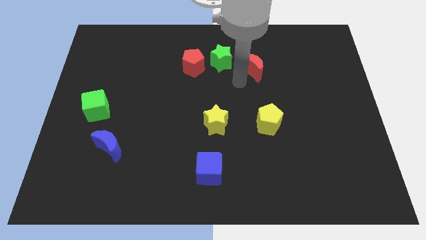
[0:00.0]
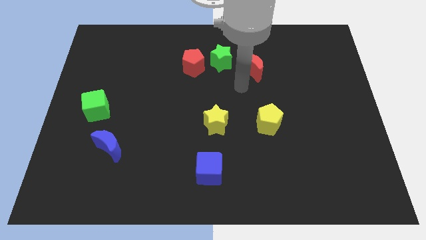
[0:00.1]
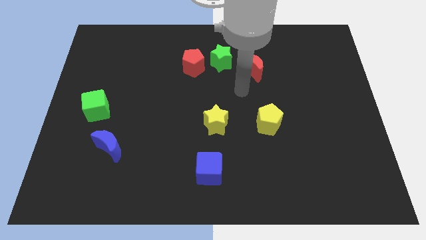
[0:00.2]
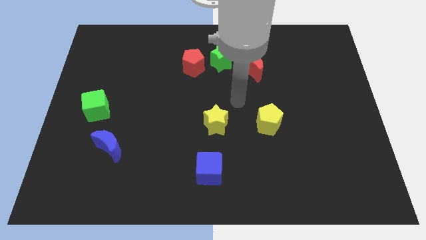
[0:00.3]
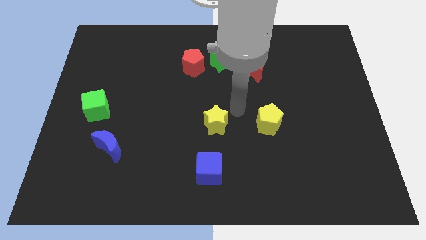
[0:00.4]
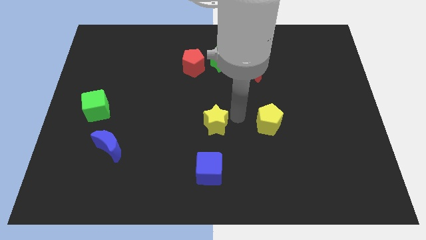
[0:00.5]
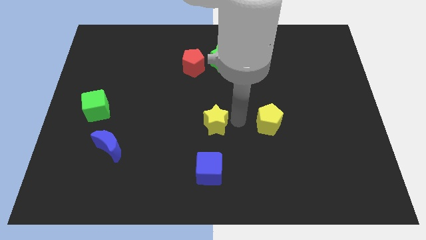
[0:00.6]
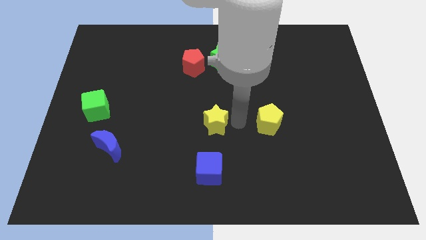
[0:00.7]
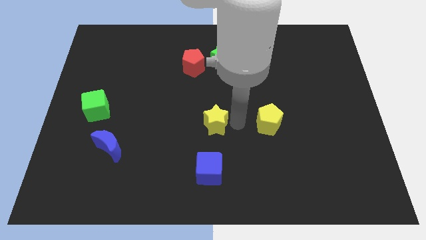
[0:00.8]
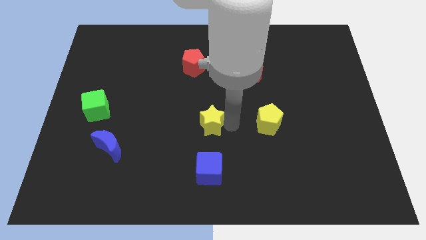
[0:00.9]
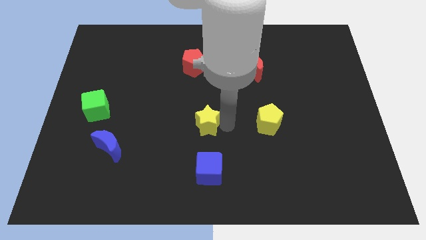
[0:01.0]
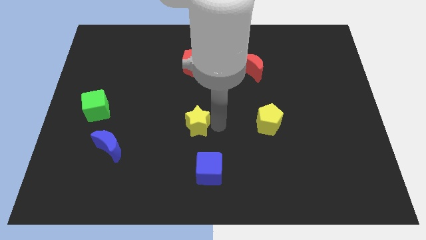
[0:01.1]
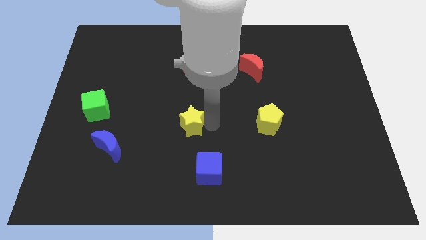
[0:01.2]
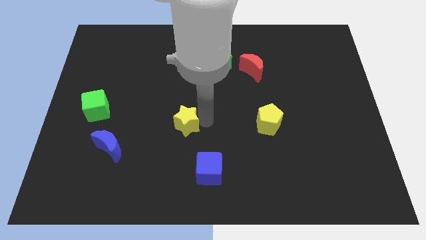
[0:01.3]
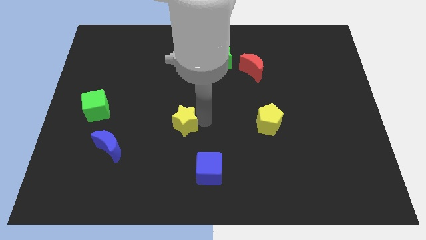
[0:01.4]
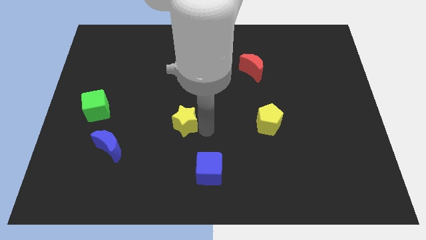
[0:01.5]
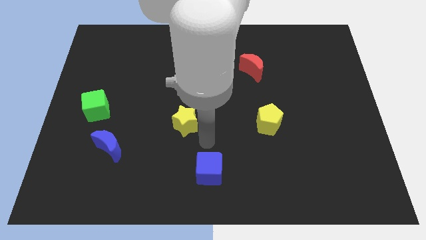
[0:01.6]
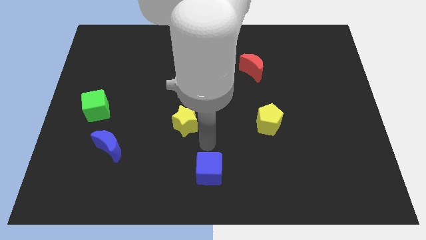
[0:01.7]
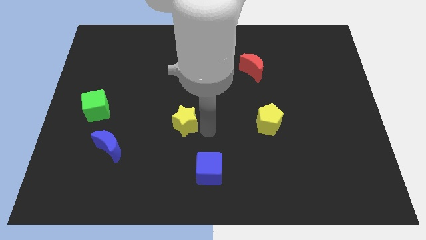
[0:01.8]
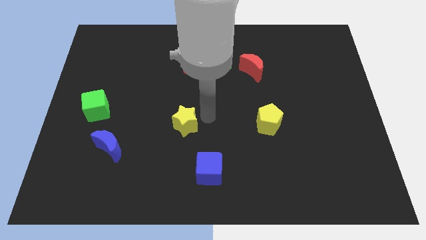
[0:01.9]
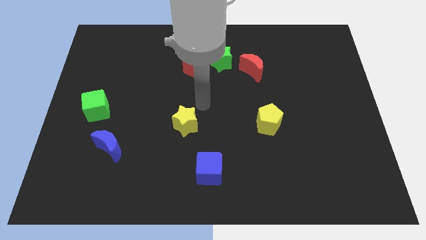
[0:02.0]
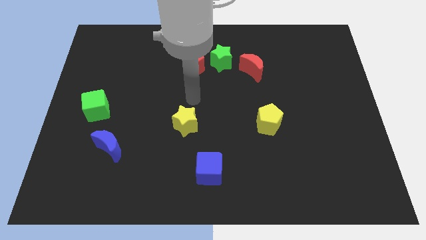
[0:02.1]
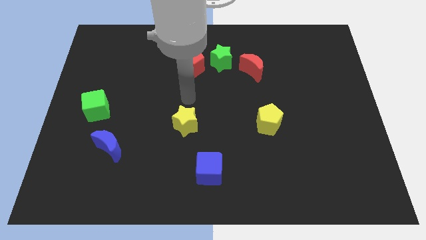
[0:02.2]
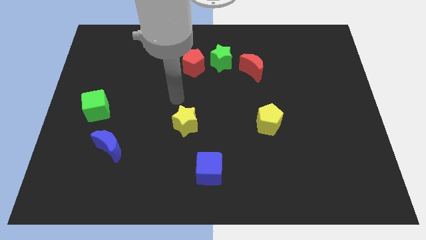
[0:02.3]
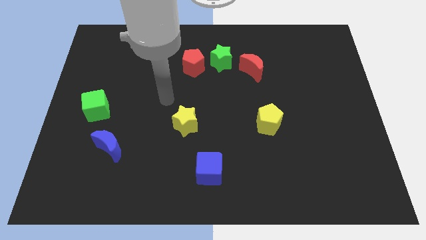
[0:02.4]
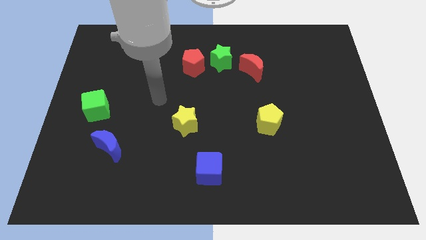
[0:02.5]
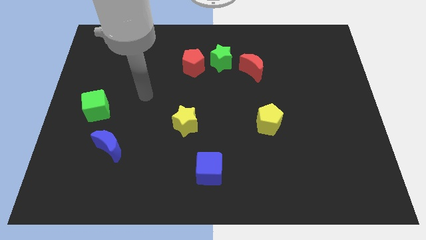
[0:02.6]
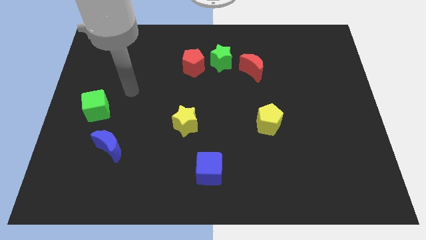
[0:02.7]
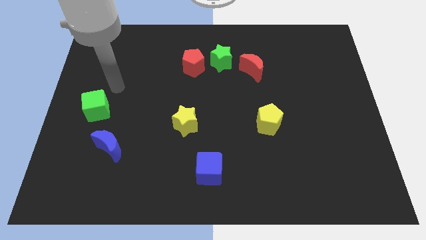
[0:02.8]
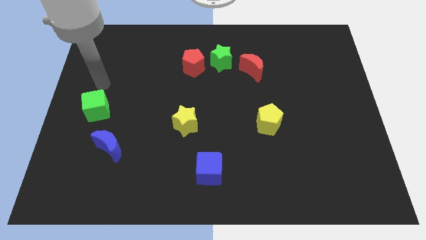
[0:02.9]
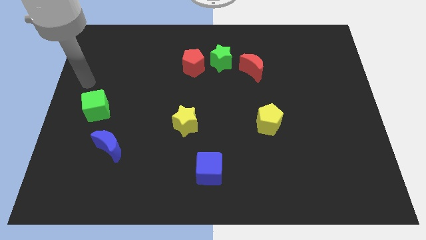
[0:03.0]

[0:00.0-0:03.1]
move the yellow star slightly to the center

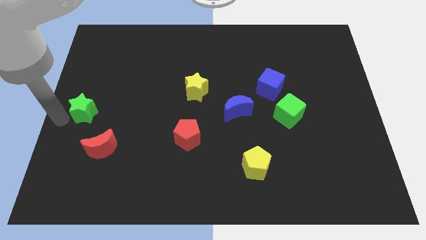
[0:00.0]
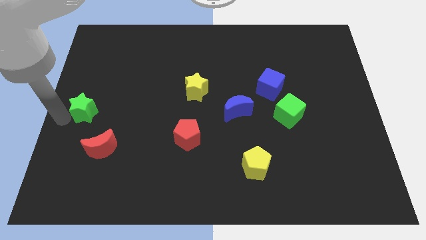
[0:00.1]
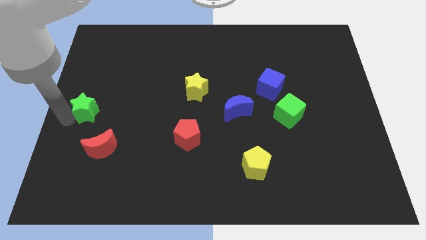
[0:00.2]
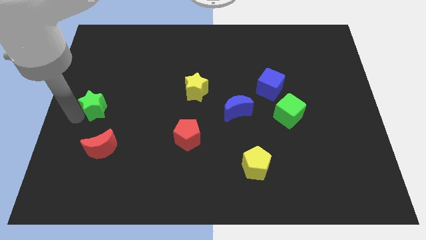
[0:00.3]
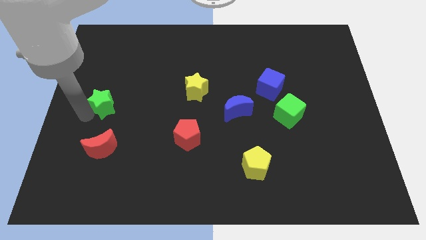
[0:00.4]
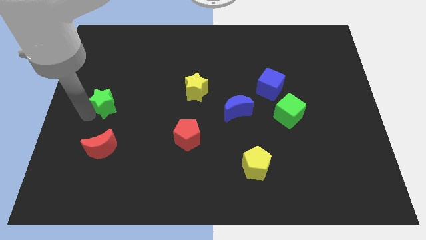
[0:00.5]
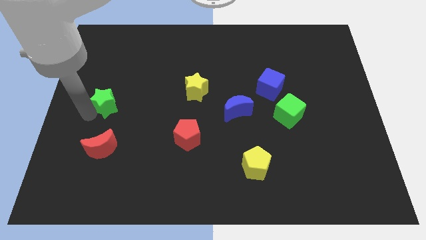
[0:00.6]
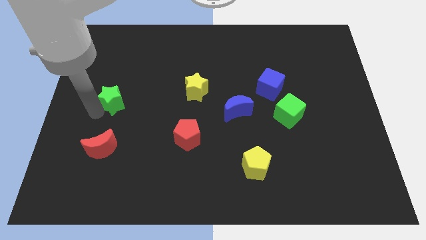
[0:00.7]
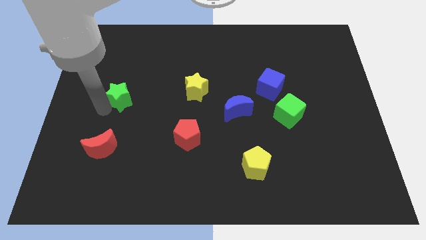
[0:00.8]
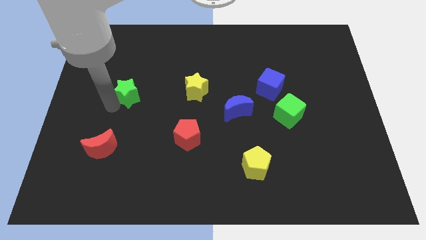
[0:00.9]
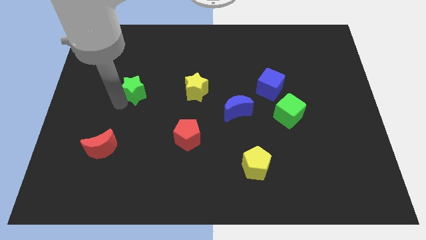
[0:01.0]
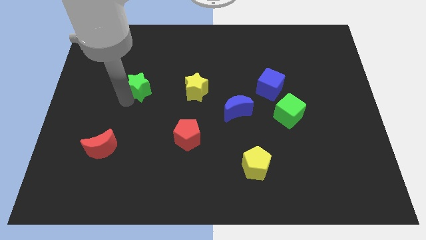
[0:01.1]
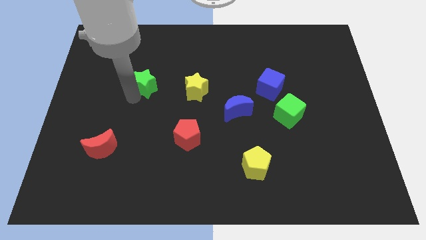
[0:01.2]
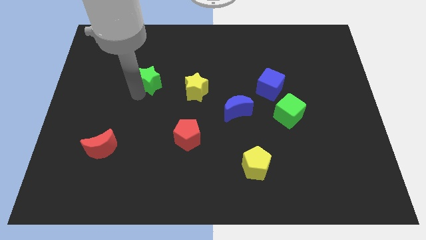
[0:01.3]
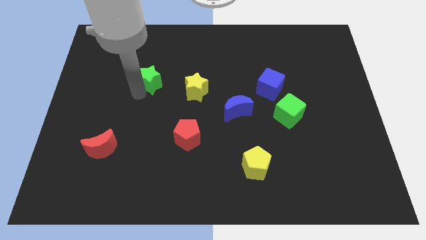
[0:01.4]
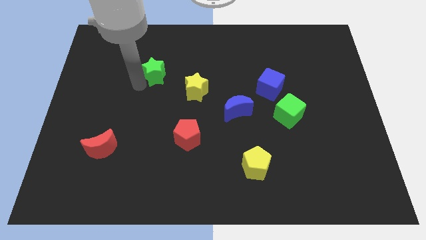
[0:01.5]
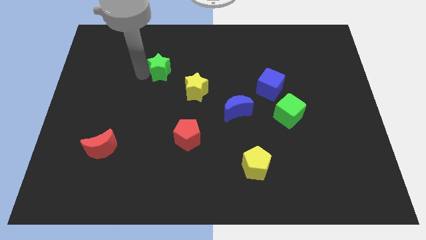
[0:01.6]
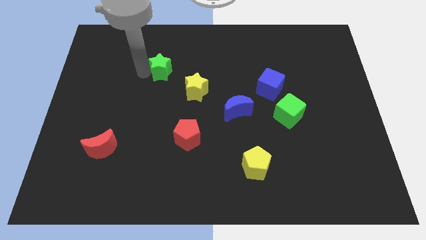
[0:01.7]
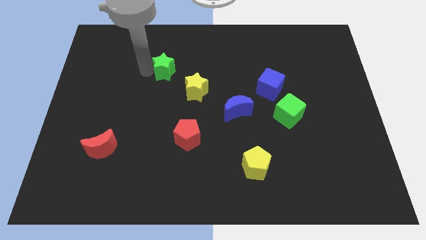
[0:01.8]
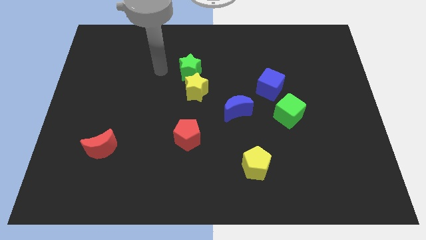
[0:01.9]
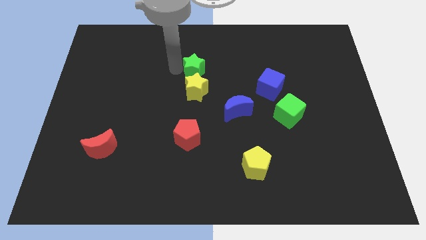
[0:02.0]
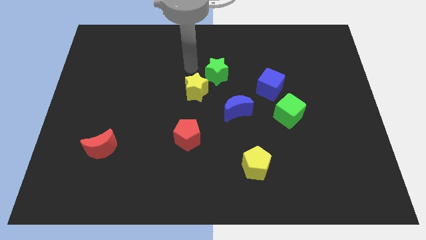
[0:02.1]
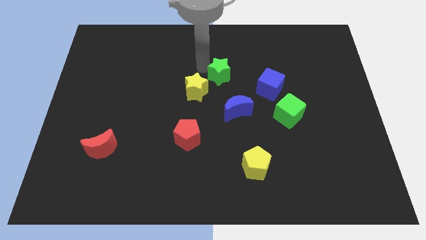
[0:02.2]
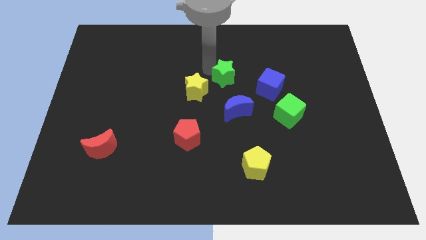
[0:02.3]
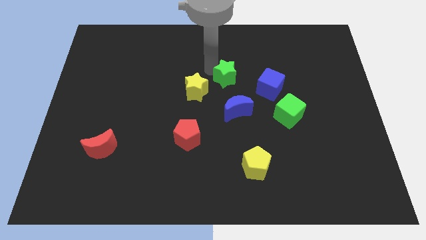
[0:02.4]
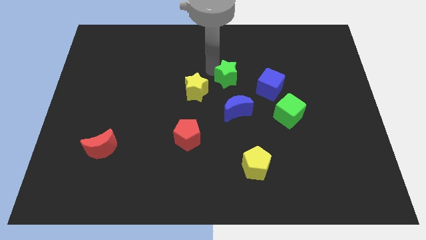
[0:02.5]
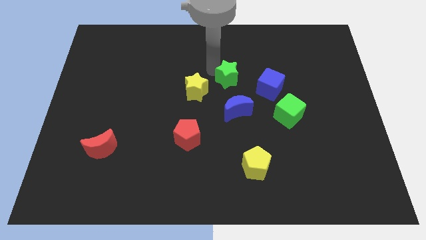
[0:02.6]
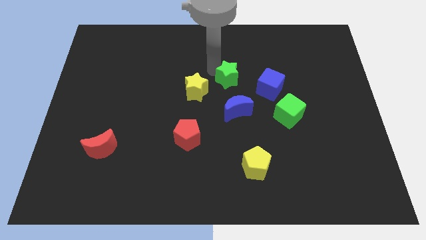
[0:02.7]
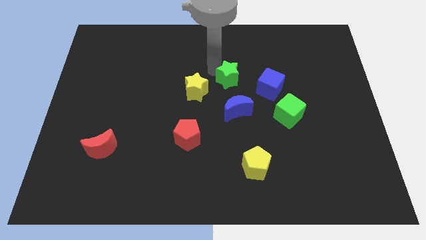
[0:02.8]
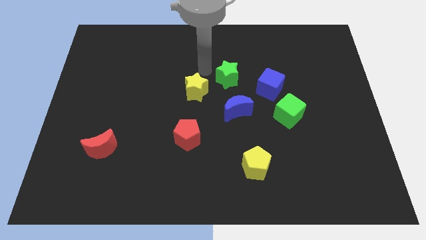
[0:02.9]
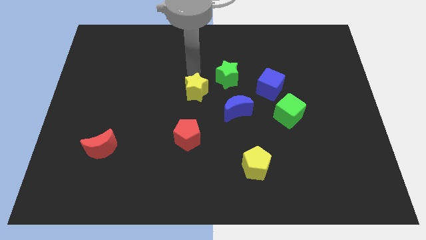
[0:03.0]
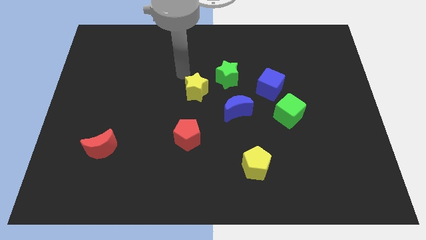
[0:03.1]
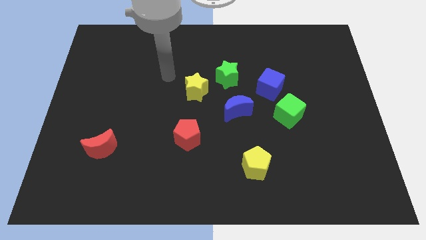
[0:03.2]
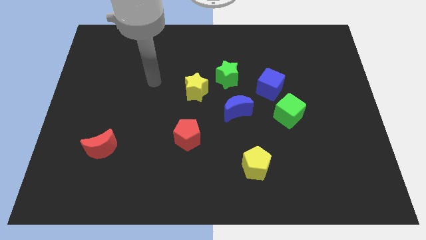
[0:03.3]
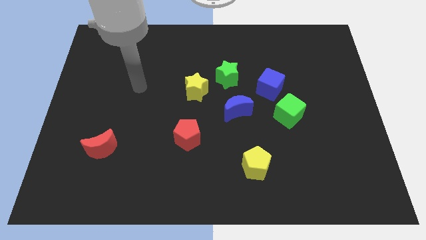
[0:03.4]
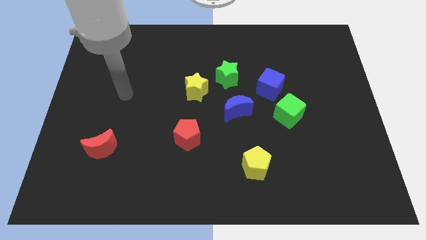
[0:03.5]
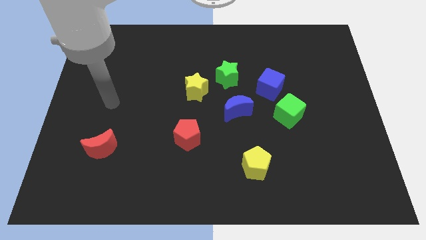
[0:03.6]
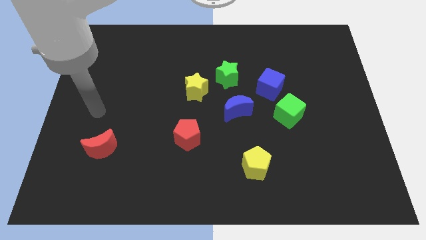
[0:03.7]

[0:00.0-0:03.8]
move the green star above the blue moon

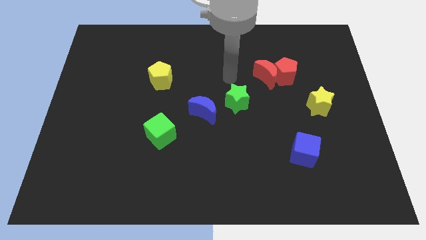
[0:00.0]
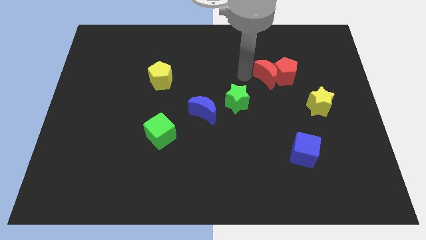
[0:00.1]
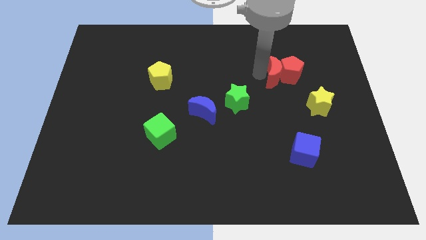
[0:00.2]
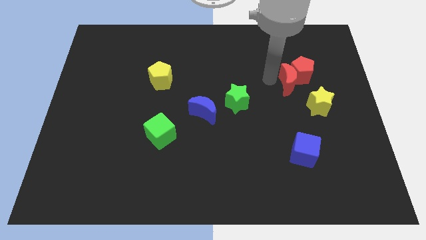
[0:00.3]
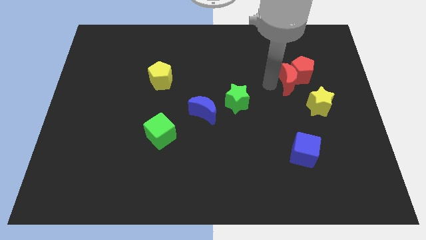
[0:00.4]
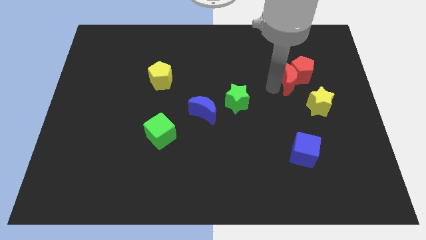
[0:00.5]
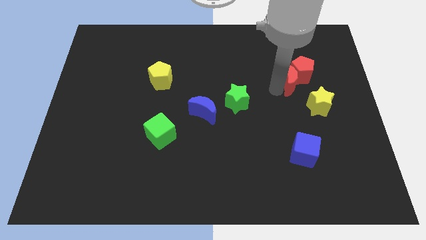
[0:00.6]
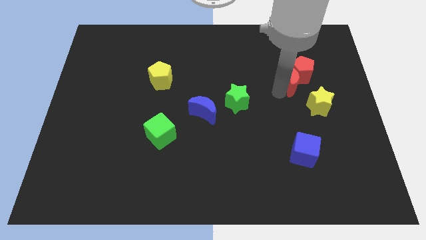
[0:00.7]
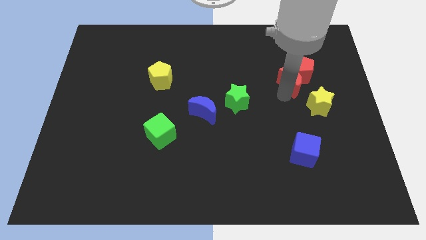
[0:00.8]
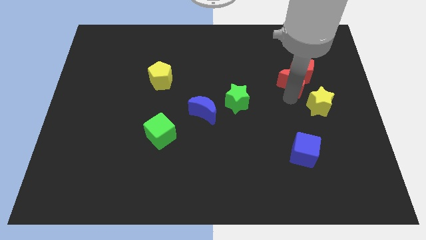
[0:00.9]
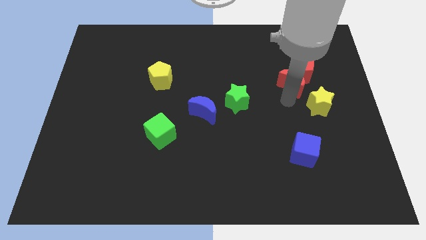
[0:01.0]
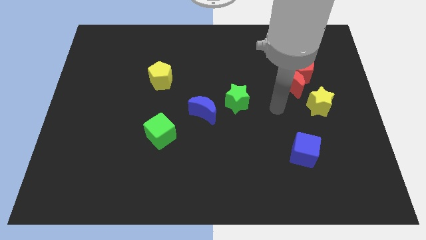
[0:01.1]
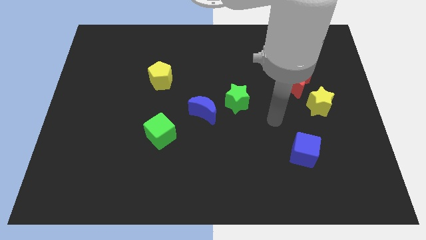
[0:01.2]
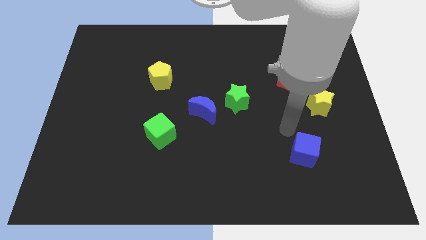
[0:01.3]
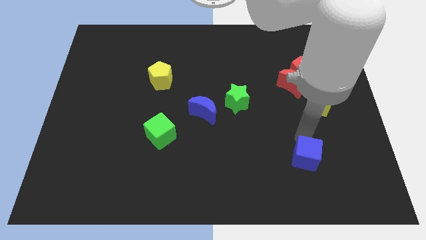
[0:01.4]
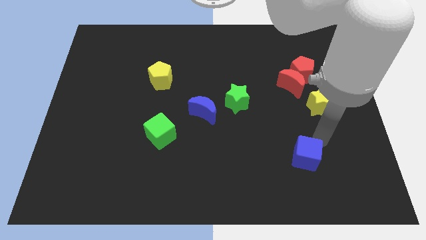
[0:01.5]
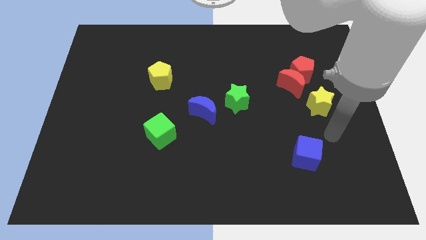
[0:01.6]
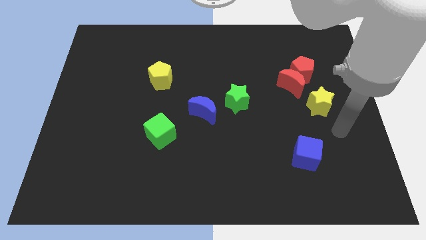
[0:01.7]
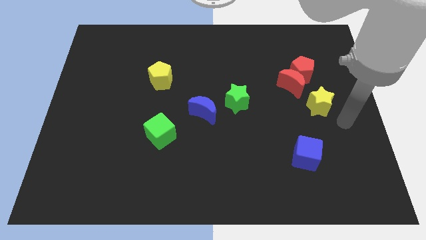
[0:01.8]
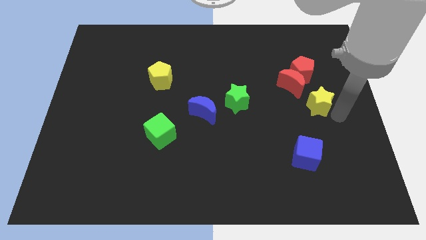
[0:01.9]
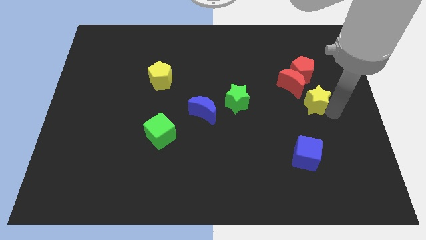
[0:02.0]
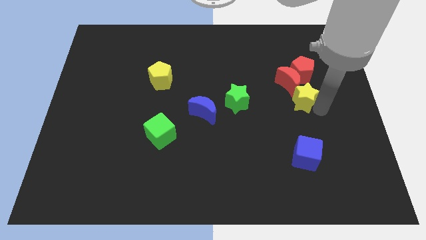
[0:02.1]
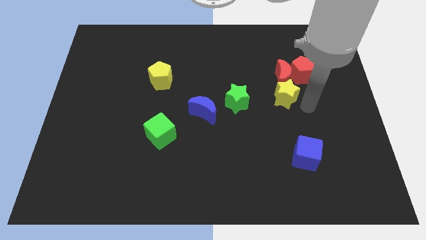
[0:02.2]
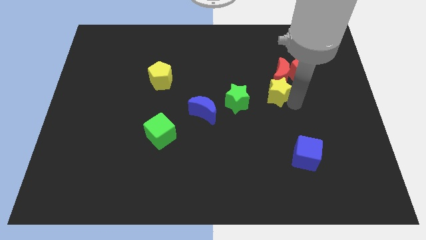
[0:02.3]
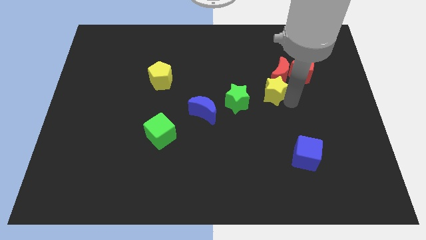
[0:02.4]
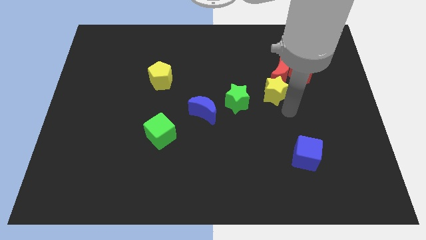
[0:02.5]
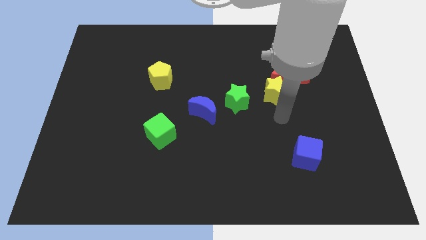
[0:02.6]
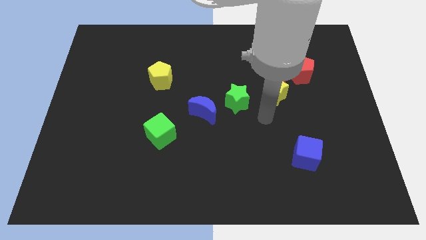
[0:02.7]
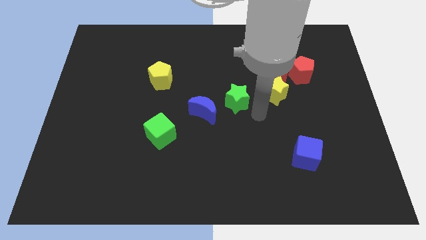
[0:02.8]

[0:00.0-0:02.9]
move the yellow star to bottom left of red pentagon
